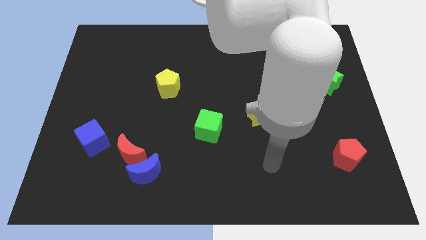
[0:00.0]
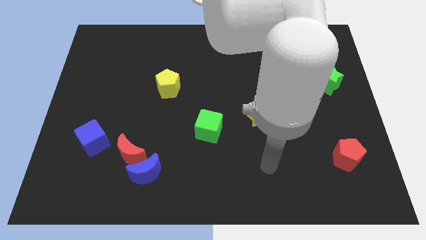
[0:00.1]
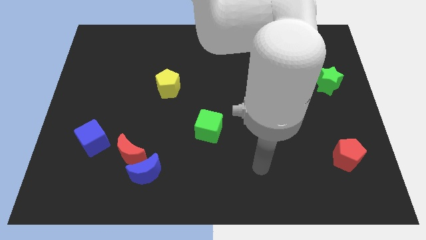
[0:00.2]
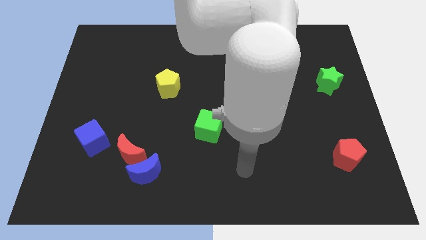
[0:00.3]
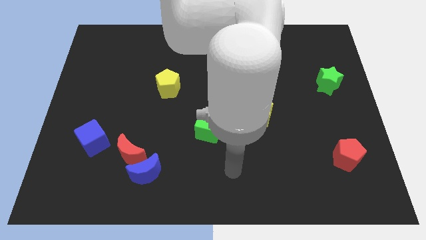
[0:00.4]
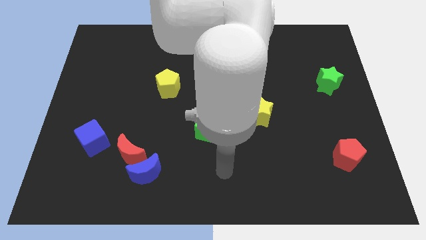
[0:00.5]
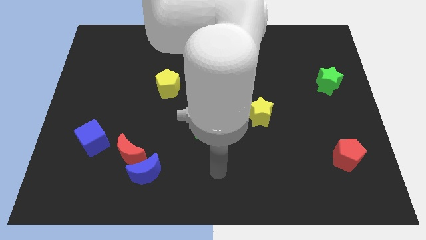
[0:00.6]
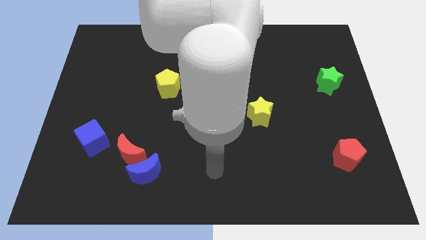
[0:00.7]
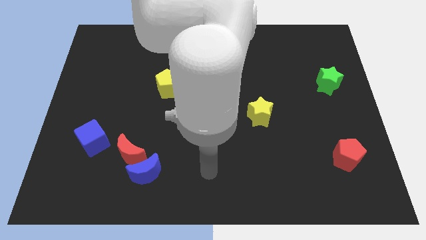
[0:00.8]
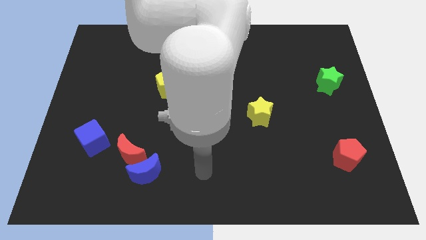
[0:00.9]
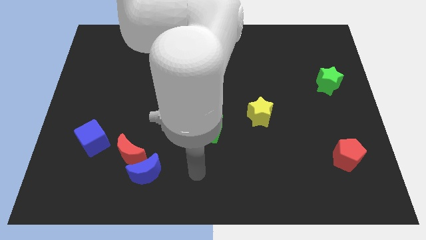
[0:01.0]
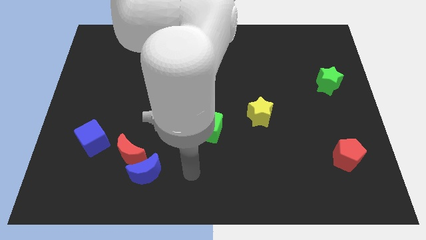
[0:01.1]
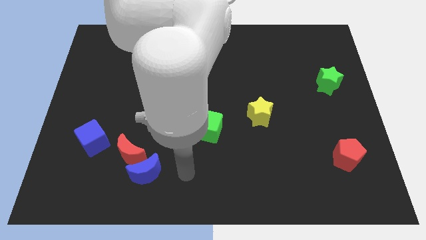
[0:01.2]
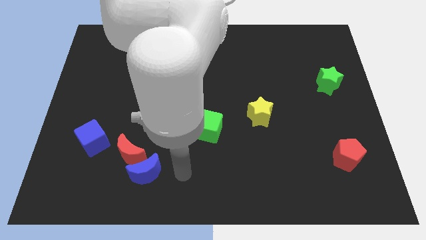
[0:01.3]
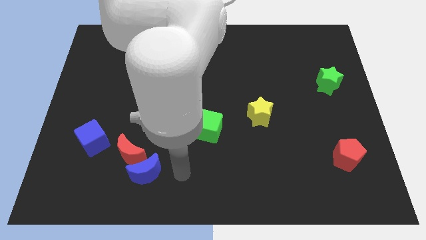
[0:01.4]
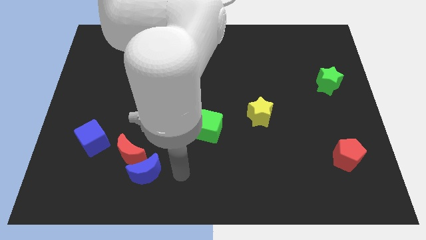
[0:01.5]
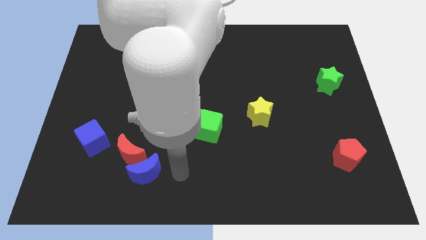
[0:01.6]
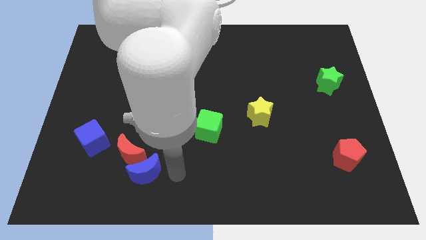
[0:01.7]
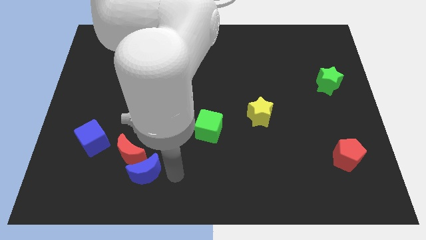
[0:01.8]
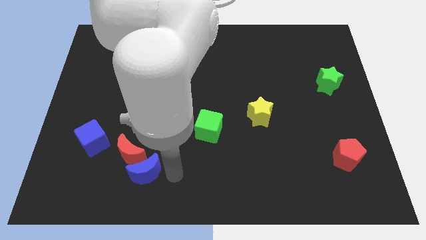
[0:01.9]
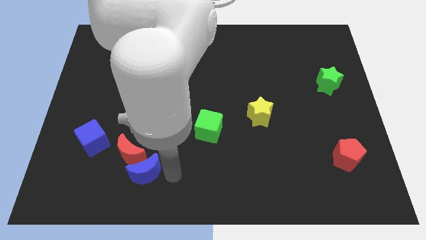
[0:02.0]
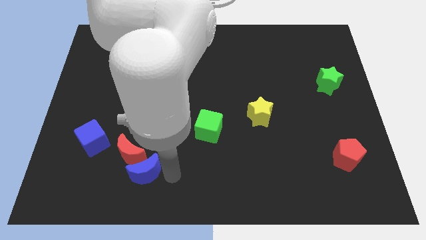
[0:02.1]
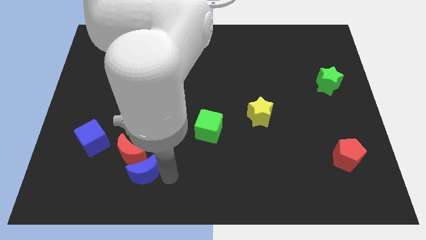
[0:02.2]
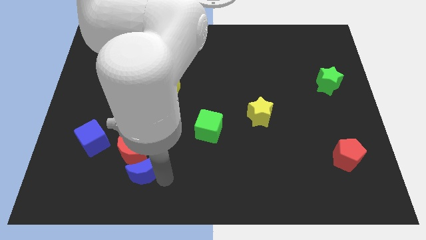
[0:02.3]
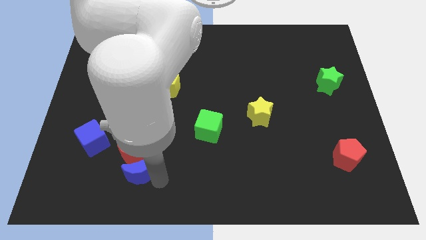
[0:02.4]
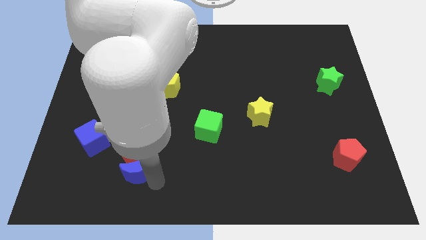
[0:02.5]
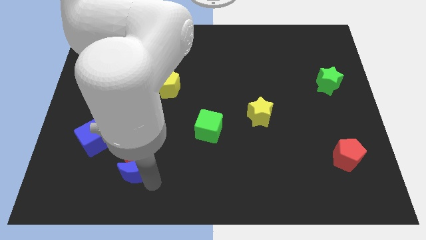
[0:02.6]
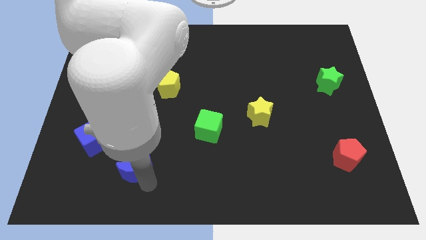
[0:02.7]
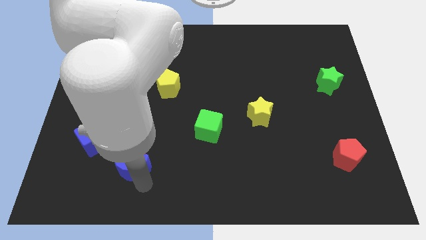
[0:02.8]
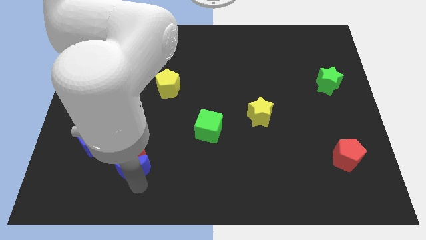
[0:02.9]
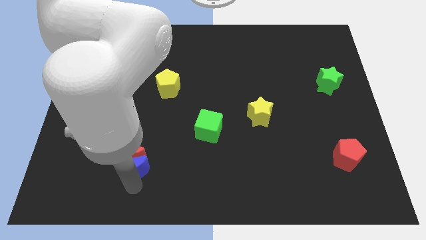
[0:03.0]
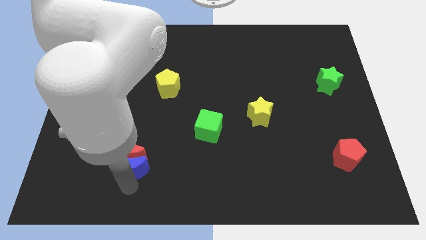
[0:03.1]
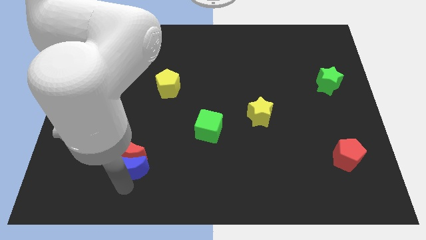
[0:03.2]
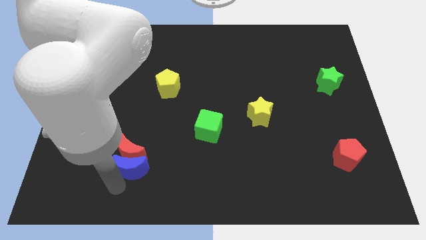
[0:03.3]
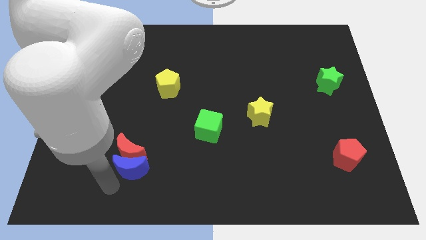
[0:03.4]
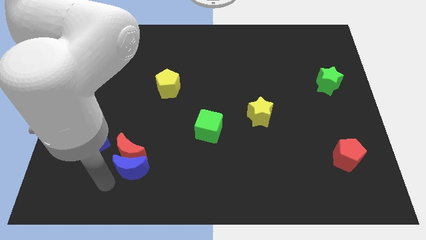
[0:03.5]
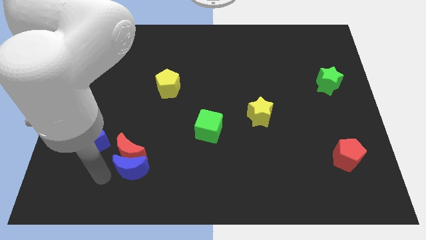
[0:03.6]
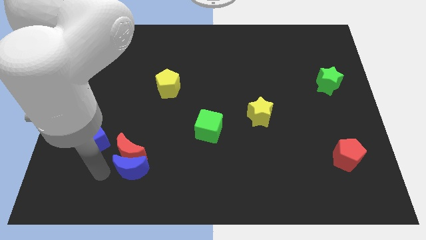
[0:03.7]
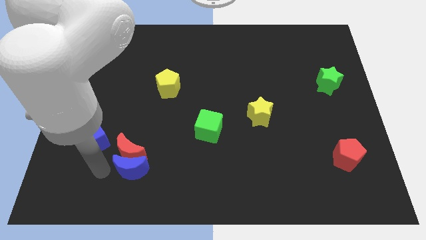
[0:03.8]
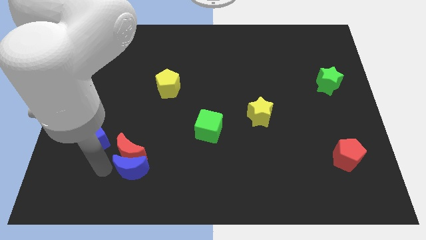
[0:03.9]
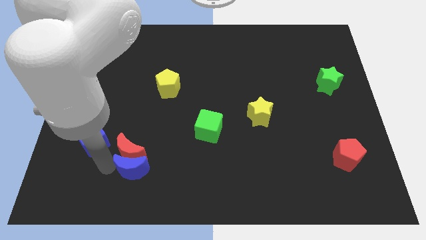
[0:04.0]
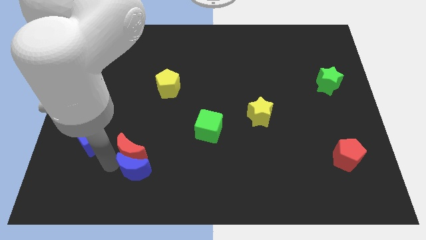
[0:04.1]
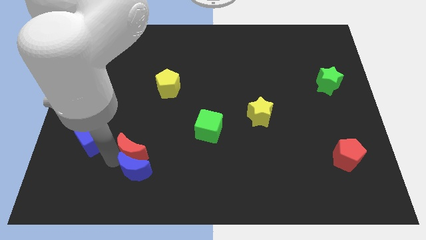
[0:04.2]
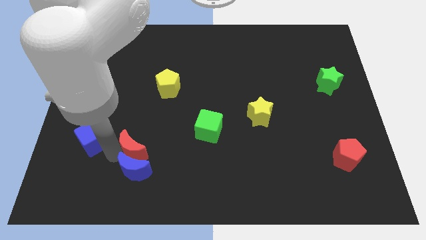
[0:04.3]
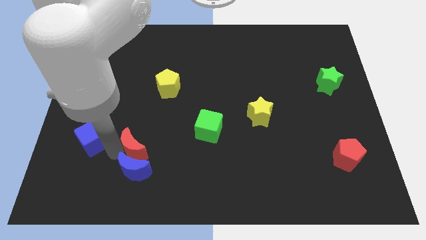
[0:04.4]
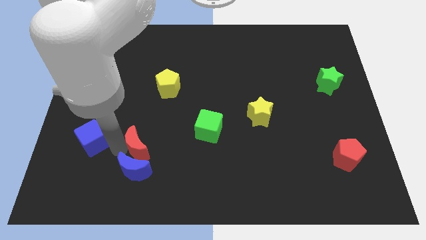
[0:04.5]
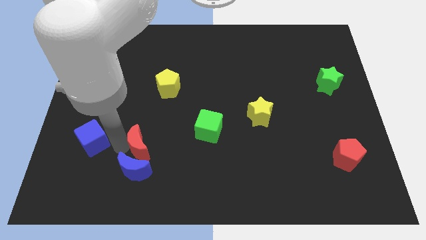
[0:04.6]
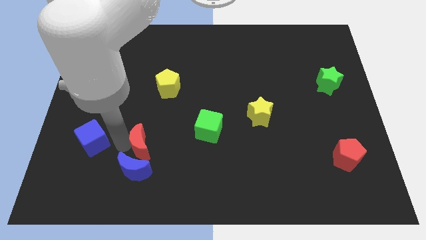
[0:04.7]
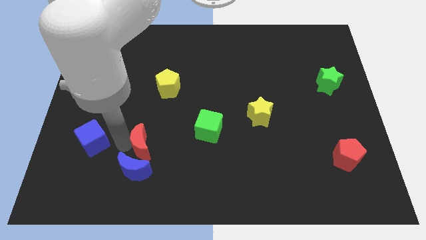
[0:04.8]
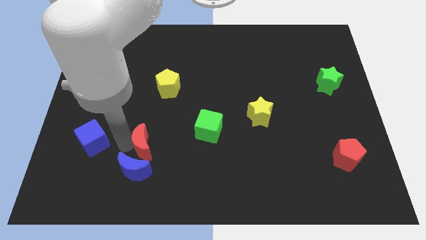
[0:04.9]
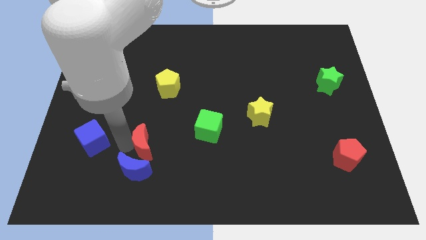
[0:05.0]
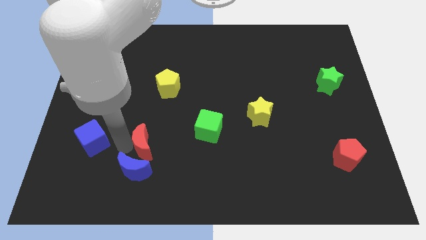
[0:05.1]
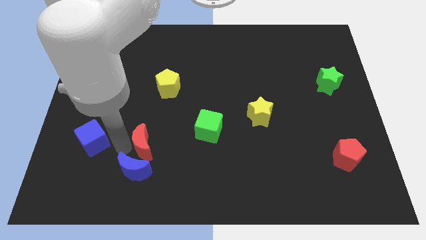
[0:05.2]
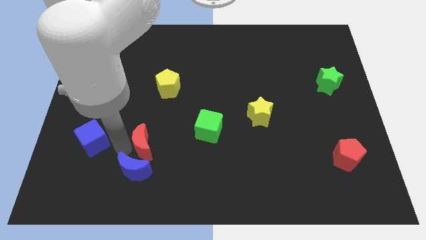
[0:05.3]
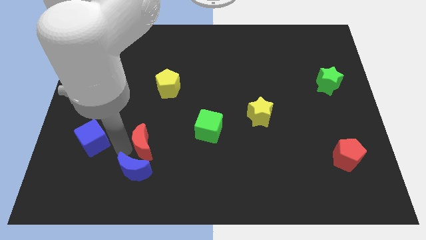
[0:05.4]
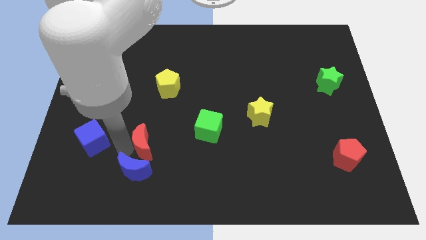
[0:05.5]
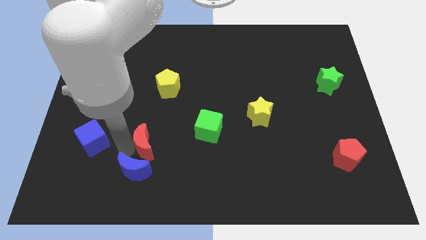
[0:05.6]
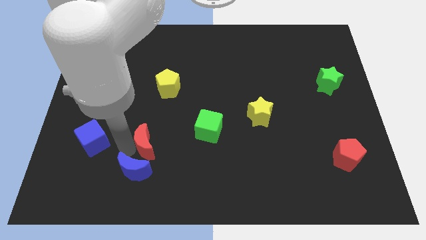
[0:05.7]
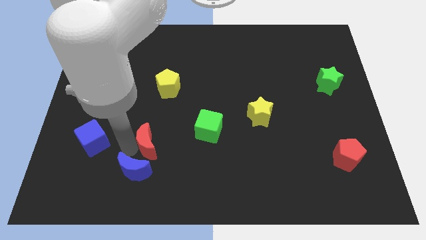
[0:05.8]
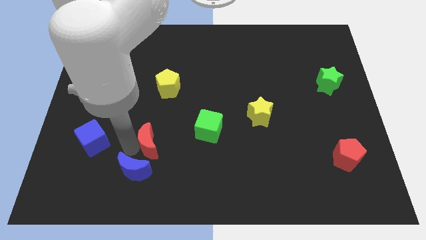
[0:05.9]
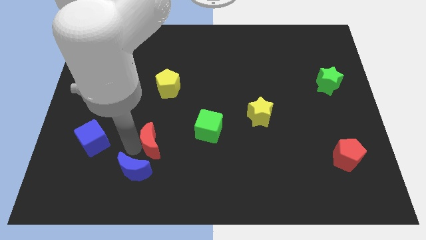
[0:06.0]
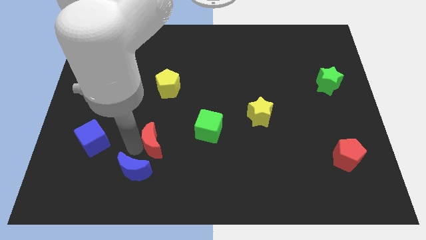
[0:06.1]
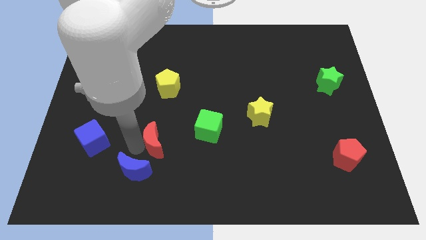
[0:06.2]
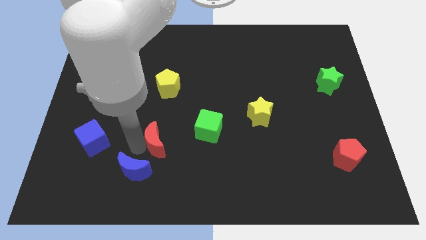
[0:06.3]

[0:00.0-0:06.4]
place your arm in between the red moon and blue moon

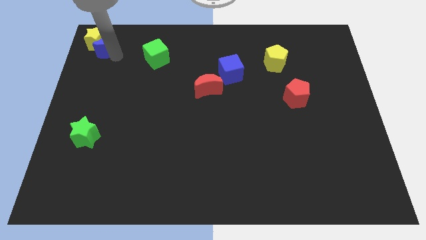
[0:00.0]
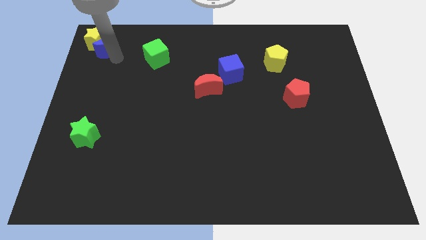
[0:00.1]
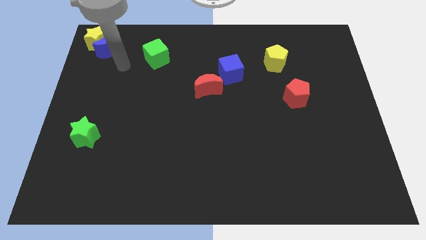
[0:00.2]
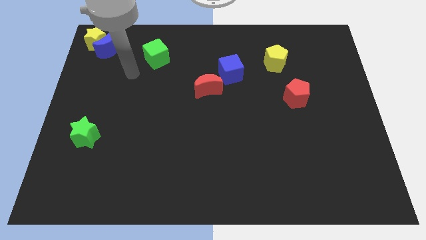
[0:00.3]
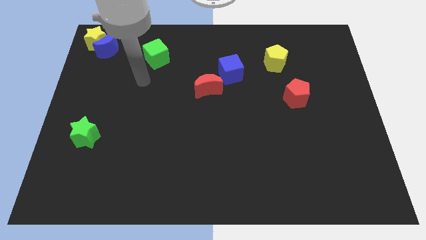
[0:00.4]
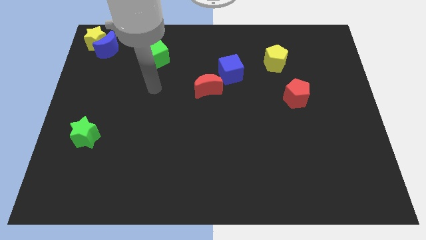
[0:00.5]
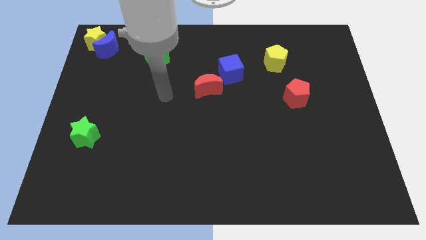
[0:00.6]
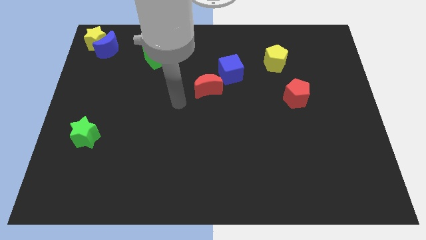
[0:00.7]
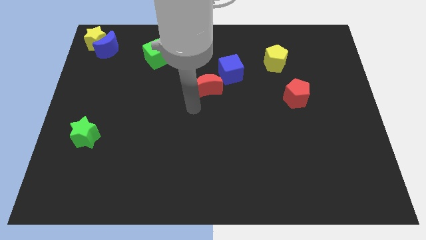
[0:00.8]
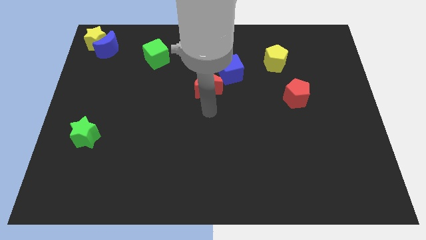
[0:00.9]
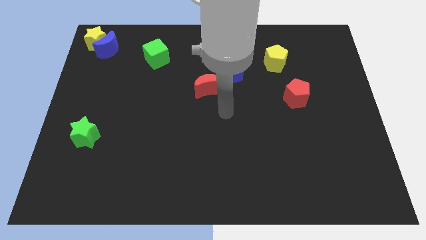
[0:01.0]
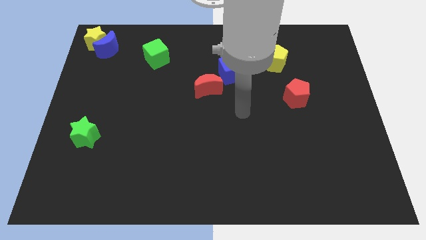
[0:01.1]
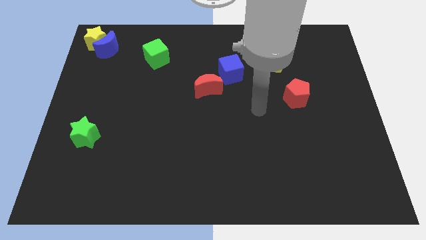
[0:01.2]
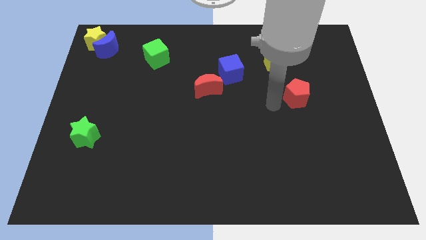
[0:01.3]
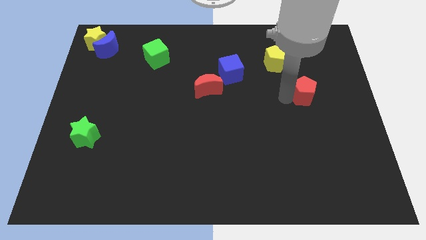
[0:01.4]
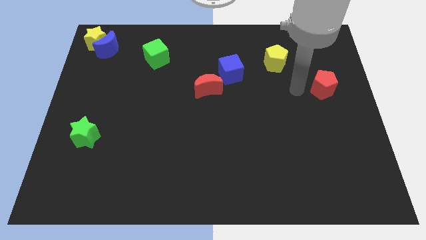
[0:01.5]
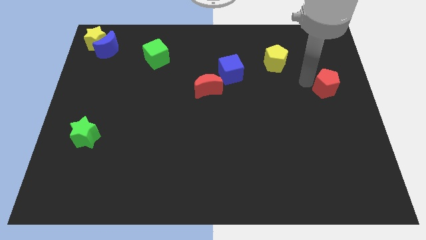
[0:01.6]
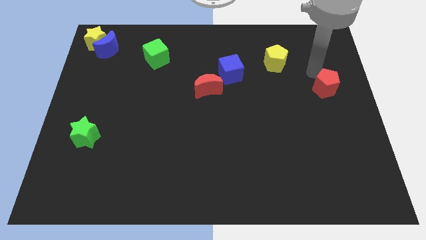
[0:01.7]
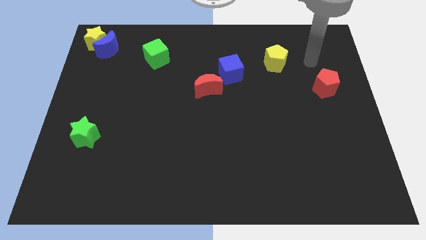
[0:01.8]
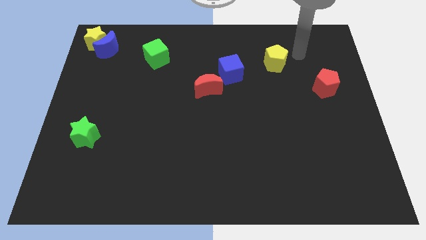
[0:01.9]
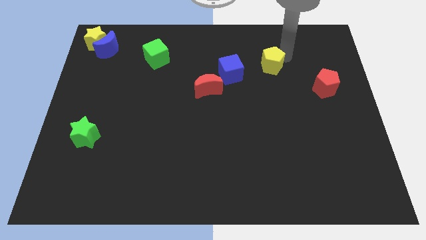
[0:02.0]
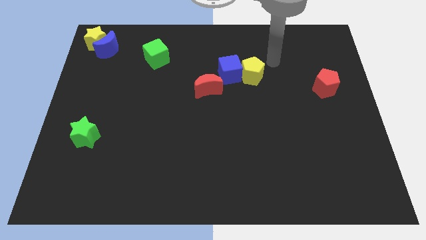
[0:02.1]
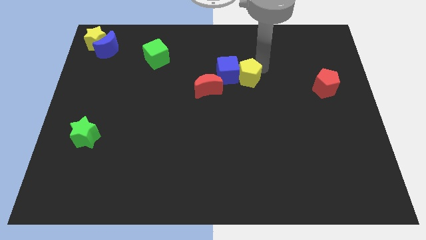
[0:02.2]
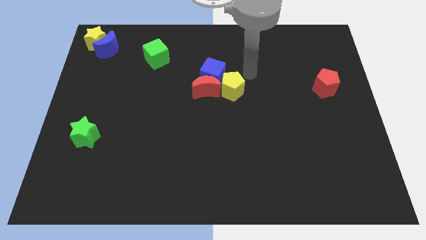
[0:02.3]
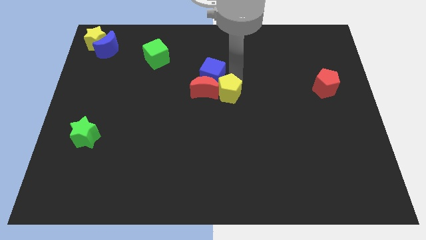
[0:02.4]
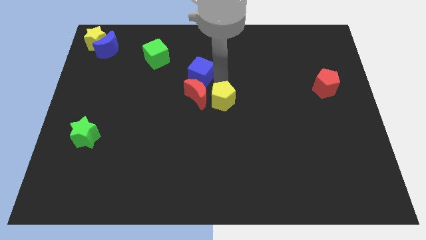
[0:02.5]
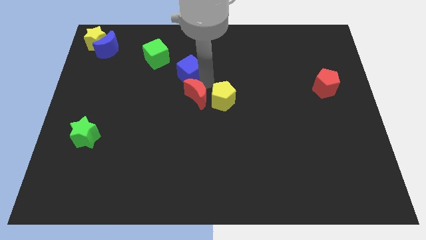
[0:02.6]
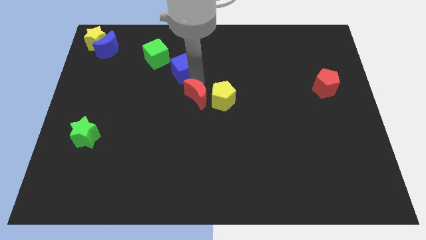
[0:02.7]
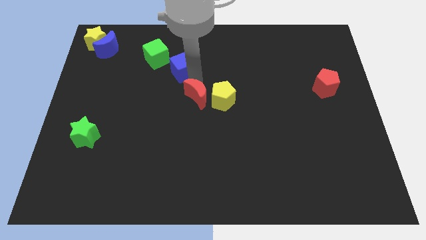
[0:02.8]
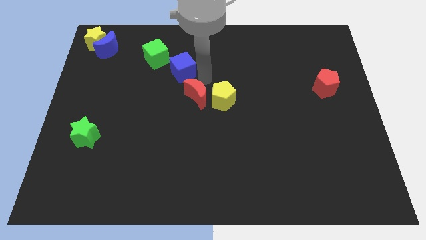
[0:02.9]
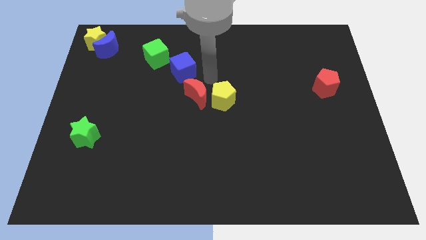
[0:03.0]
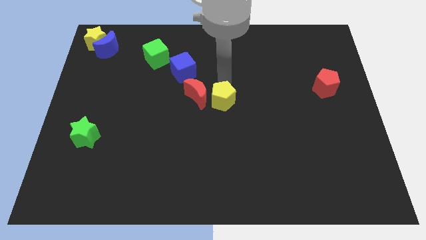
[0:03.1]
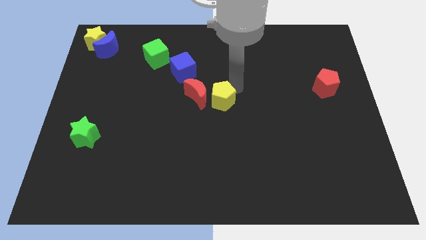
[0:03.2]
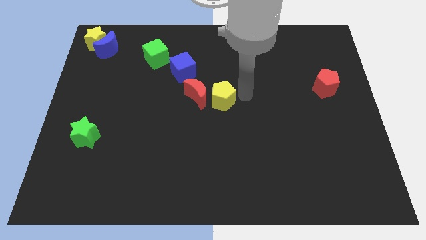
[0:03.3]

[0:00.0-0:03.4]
move the blue cube diagonally to the top right of the green star
